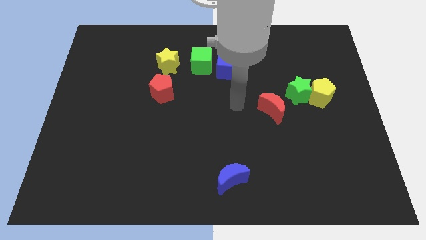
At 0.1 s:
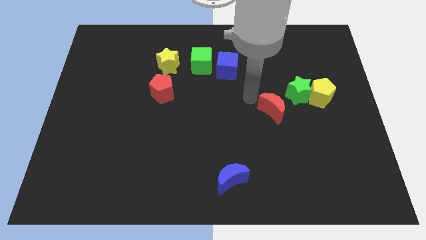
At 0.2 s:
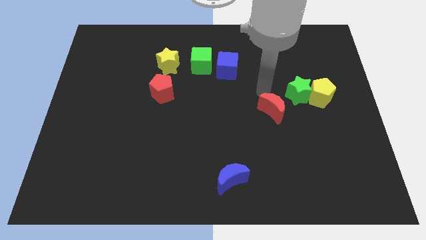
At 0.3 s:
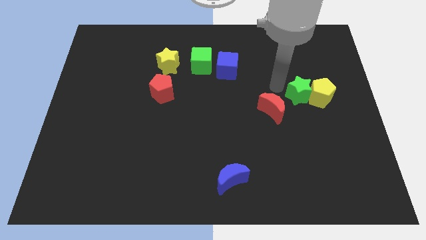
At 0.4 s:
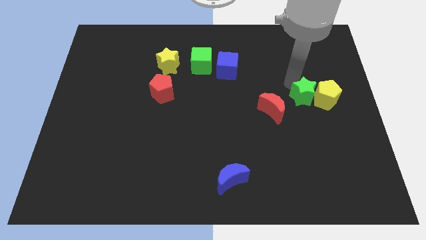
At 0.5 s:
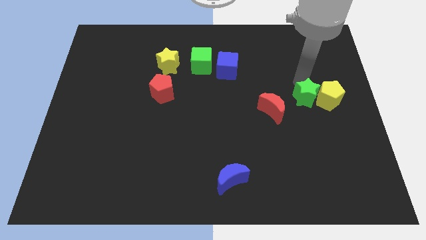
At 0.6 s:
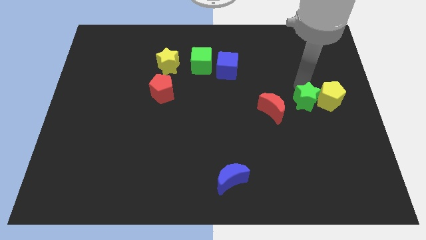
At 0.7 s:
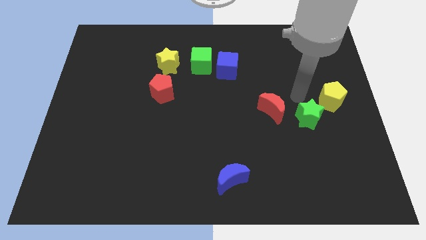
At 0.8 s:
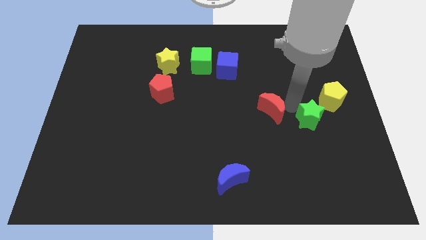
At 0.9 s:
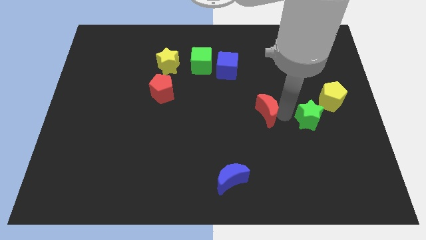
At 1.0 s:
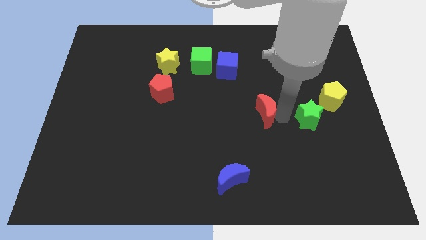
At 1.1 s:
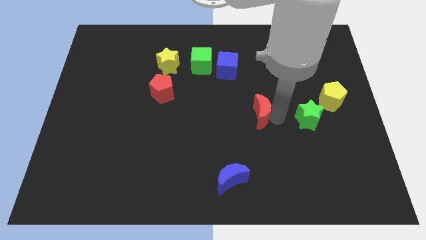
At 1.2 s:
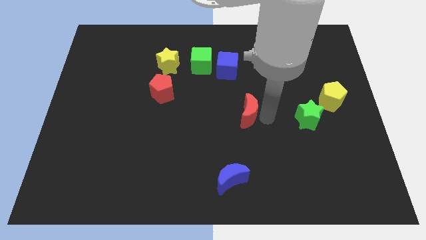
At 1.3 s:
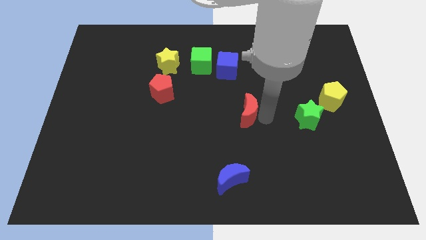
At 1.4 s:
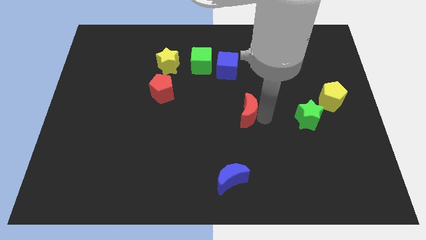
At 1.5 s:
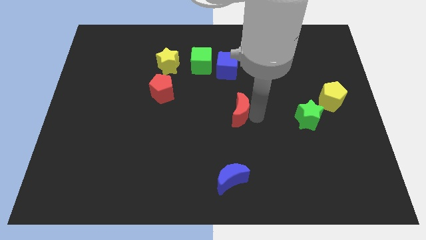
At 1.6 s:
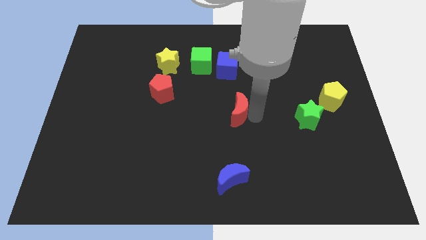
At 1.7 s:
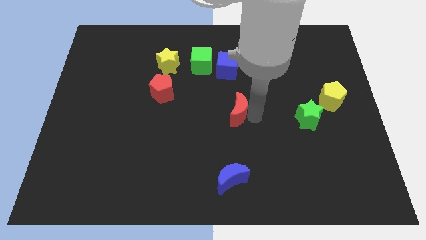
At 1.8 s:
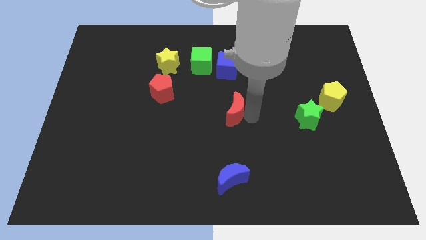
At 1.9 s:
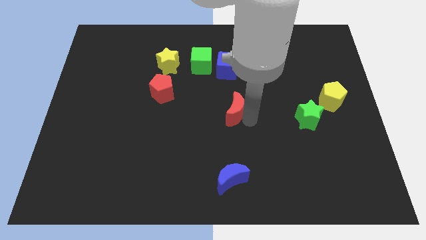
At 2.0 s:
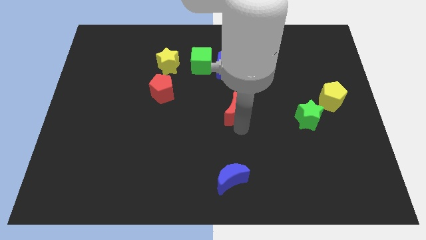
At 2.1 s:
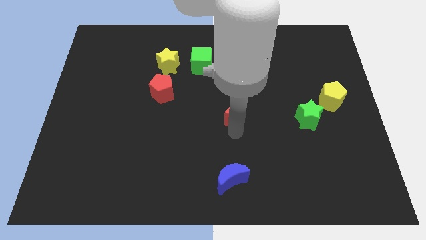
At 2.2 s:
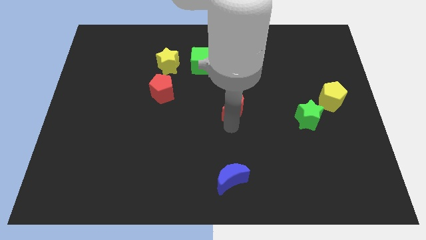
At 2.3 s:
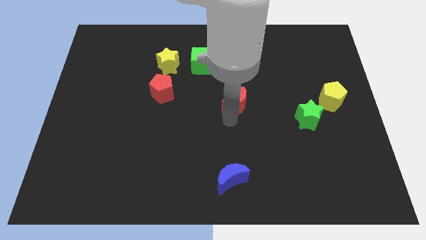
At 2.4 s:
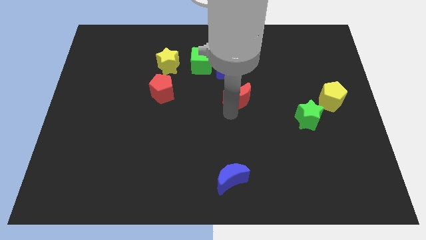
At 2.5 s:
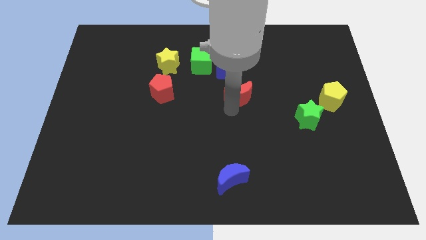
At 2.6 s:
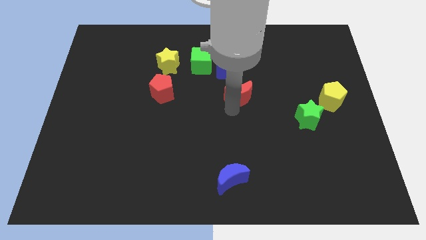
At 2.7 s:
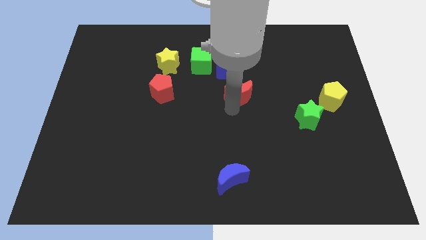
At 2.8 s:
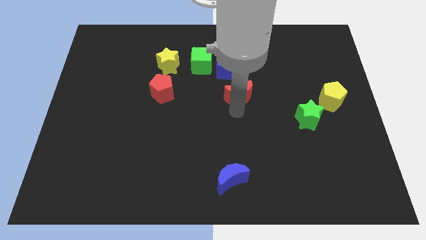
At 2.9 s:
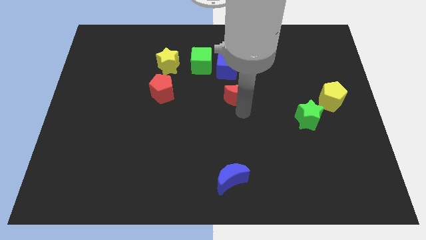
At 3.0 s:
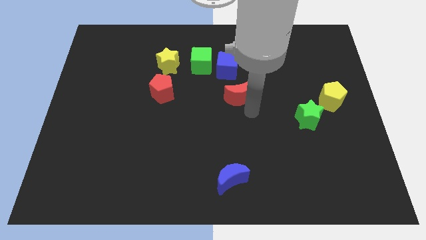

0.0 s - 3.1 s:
move the red crescent towards the blue cube

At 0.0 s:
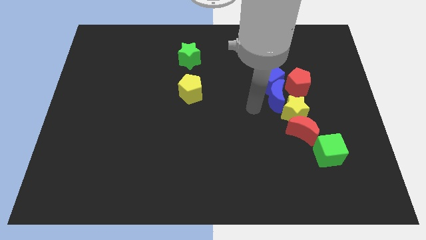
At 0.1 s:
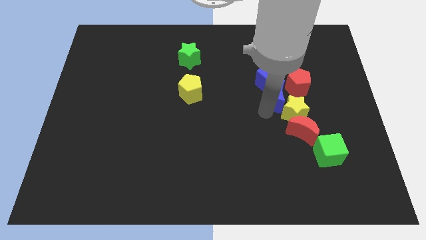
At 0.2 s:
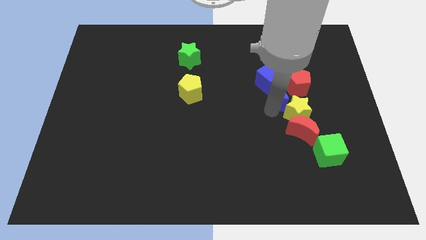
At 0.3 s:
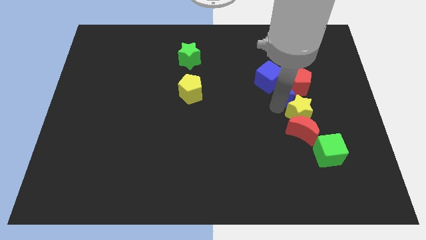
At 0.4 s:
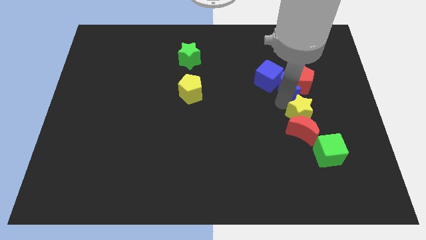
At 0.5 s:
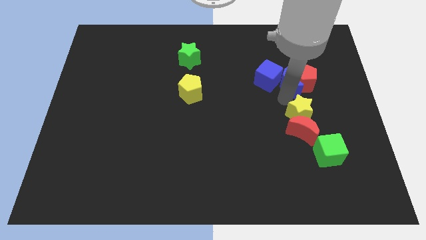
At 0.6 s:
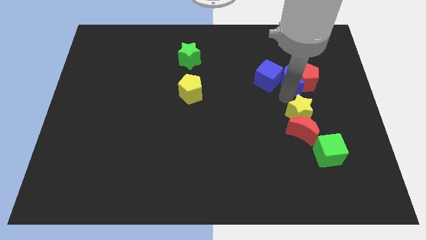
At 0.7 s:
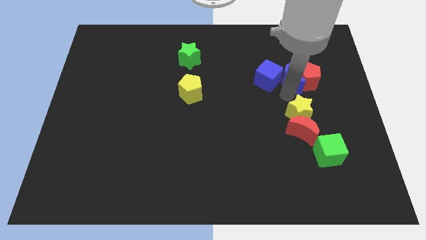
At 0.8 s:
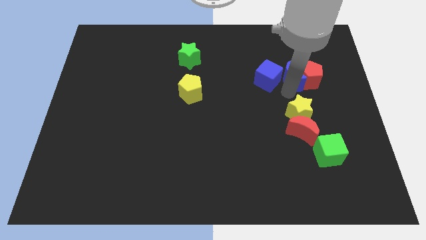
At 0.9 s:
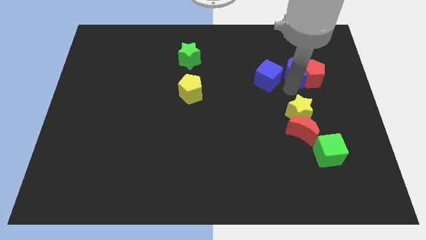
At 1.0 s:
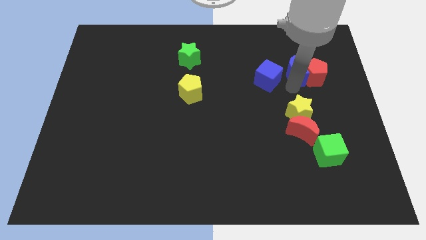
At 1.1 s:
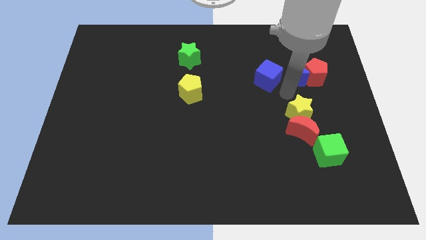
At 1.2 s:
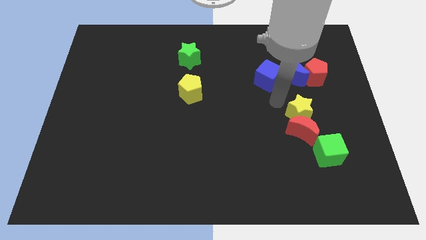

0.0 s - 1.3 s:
move blue crescent into red pentagon

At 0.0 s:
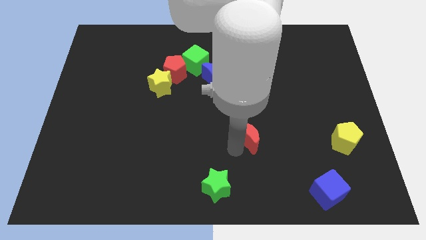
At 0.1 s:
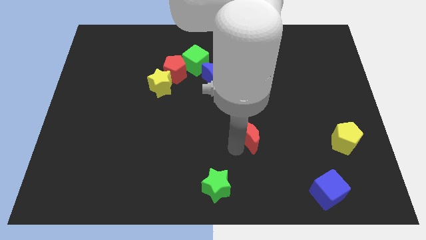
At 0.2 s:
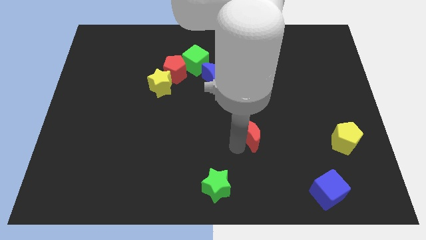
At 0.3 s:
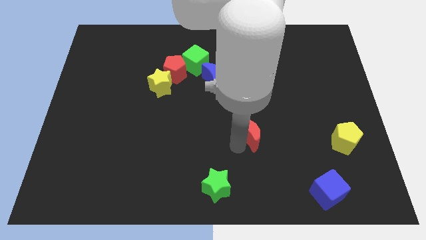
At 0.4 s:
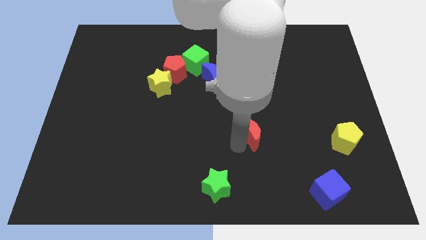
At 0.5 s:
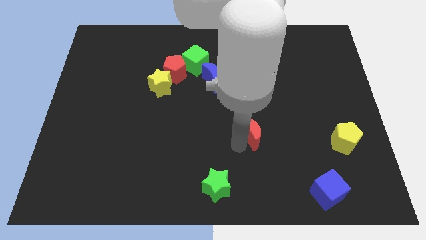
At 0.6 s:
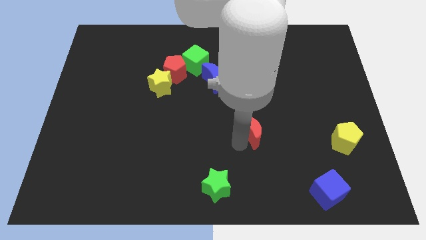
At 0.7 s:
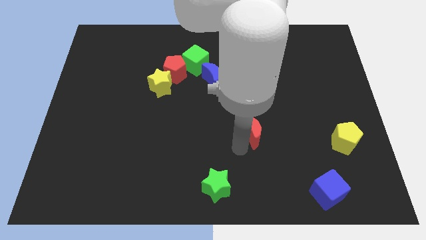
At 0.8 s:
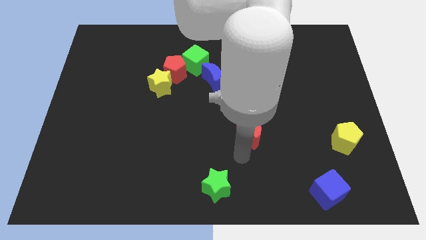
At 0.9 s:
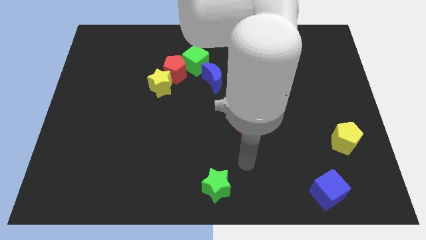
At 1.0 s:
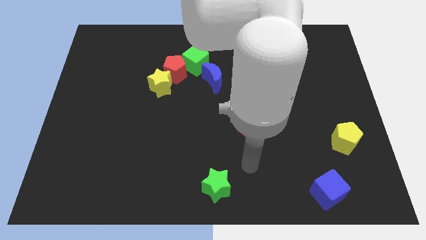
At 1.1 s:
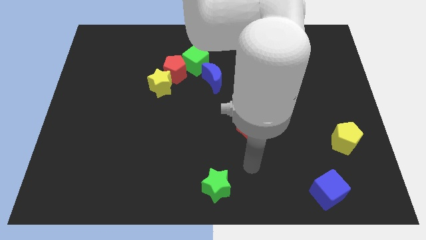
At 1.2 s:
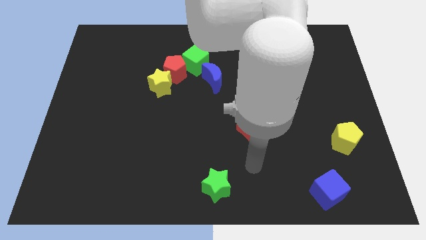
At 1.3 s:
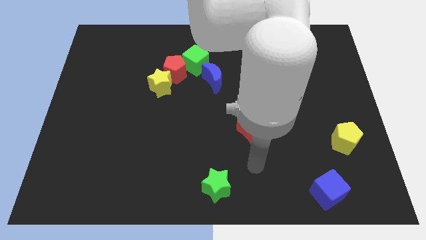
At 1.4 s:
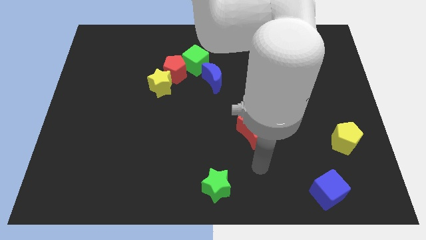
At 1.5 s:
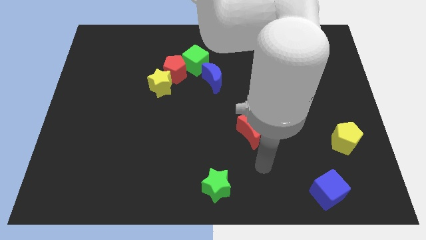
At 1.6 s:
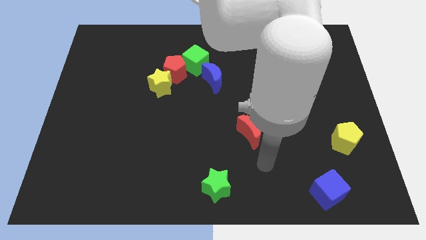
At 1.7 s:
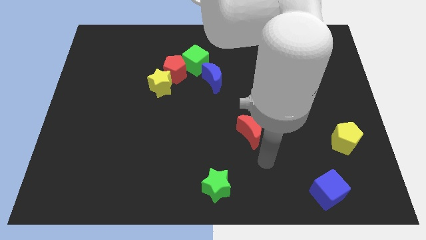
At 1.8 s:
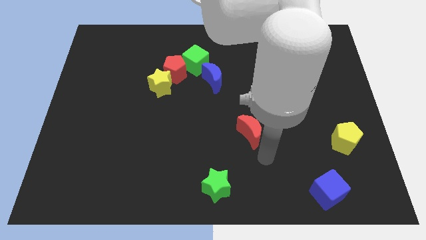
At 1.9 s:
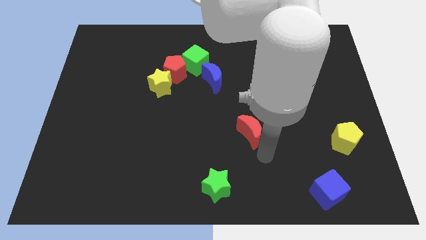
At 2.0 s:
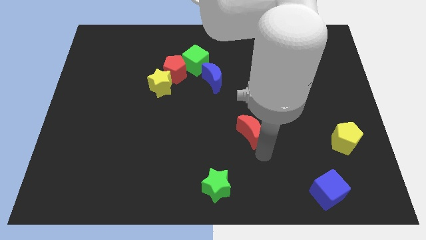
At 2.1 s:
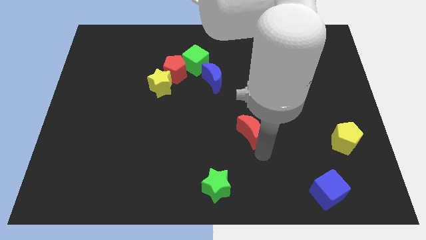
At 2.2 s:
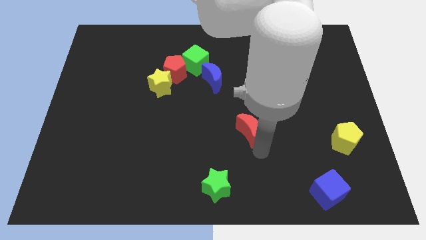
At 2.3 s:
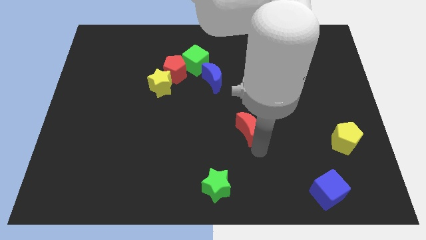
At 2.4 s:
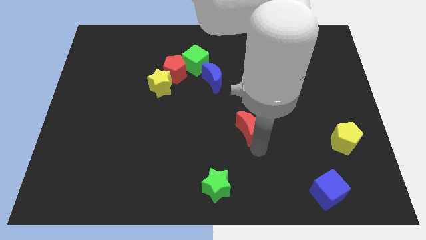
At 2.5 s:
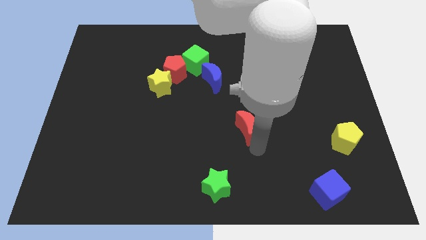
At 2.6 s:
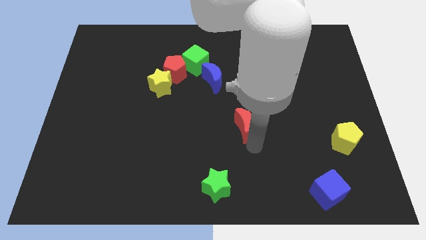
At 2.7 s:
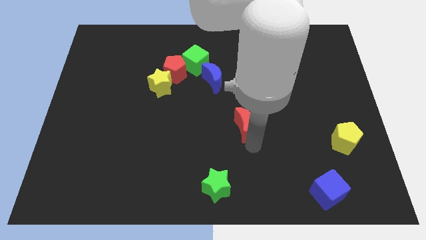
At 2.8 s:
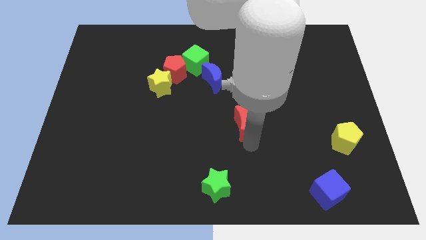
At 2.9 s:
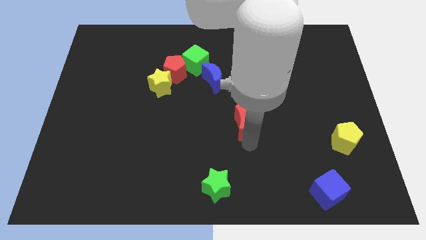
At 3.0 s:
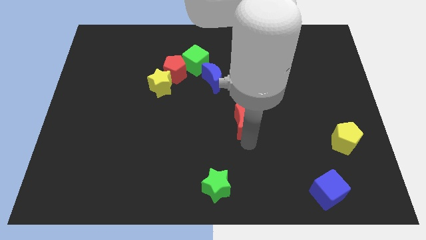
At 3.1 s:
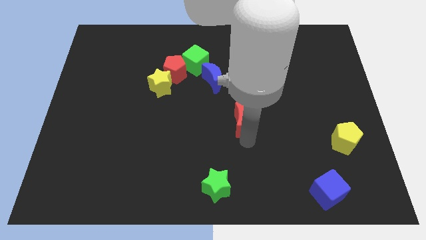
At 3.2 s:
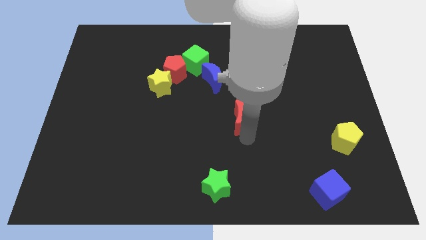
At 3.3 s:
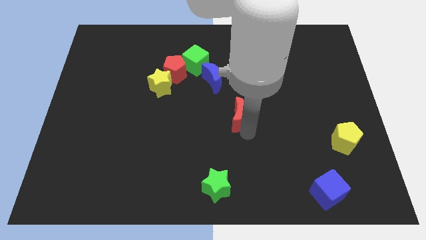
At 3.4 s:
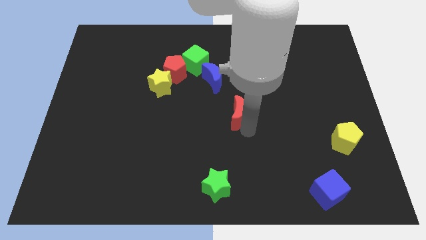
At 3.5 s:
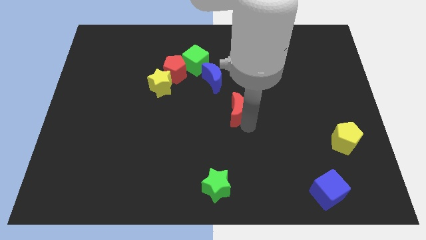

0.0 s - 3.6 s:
move red crescent towards blue crescent

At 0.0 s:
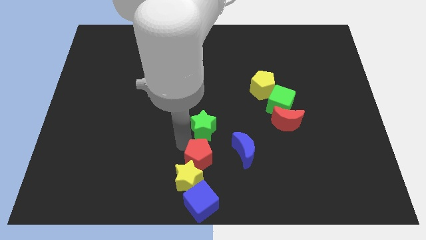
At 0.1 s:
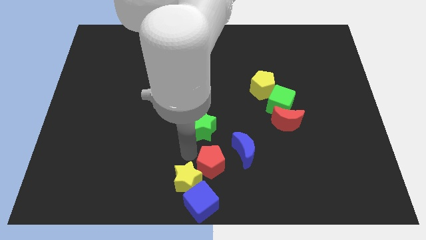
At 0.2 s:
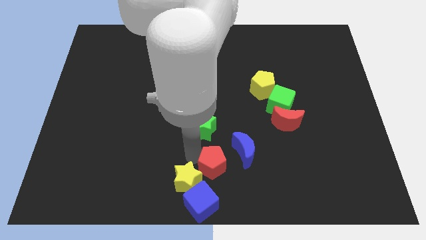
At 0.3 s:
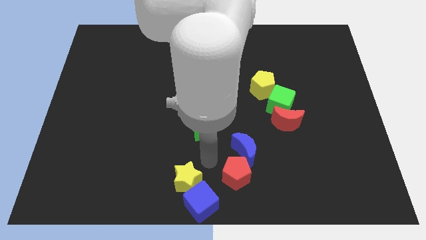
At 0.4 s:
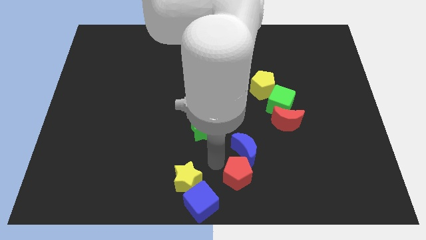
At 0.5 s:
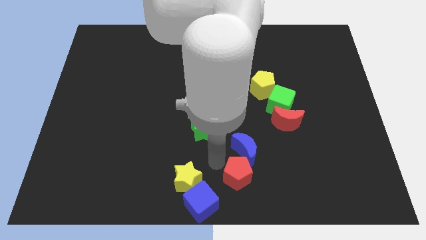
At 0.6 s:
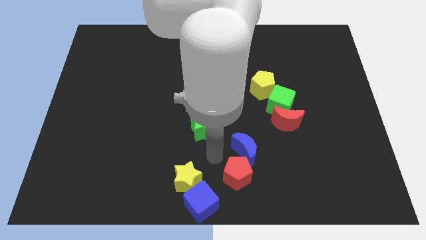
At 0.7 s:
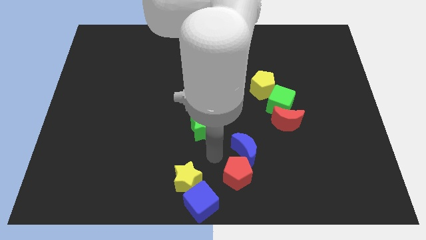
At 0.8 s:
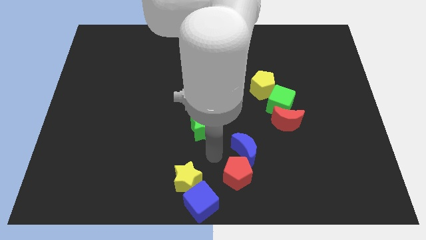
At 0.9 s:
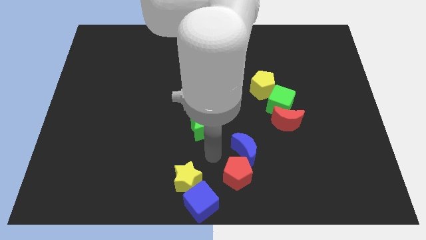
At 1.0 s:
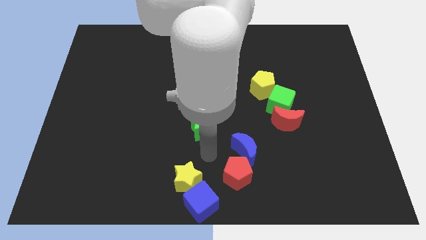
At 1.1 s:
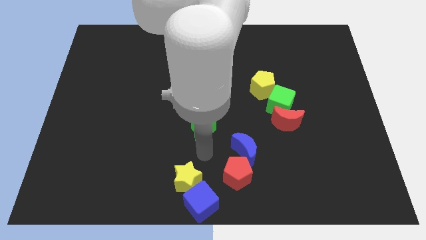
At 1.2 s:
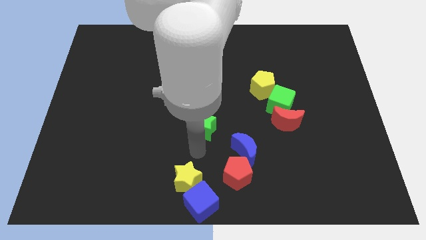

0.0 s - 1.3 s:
separate red pentagon from yellow star
